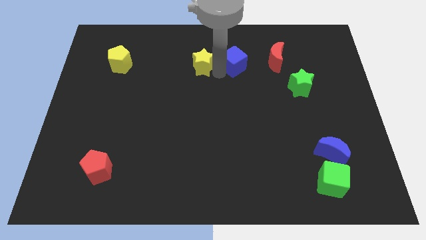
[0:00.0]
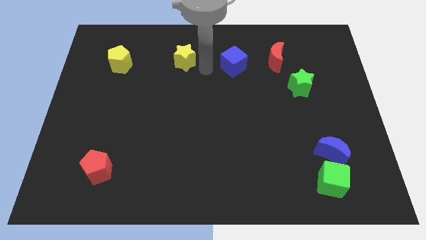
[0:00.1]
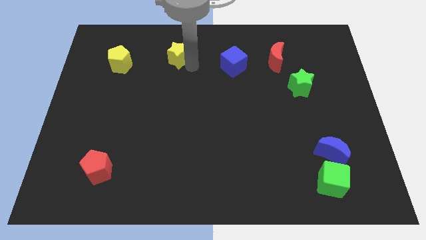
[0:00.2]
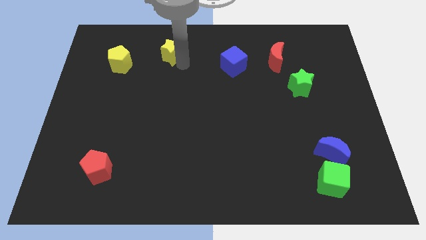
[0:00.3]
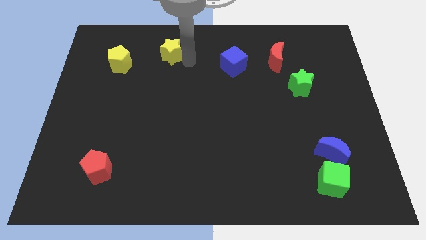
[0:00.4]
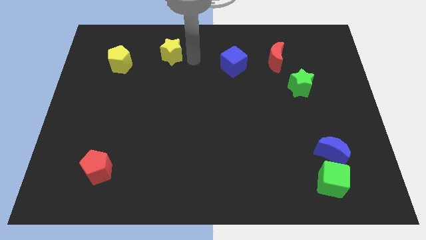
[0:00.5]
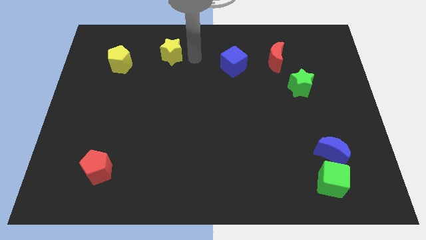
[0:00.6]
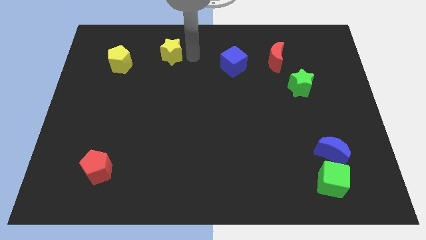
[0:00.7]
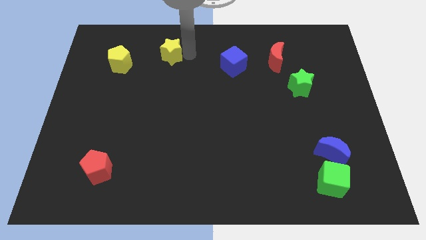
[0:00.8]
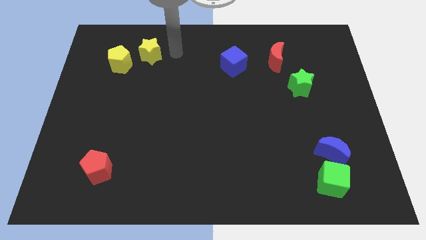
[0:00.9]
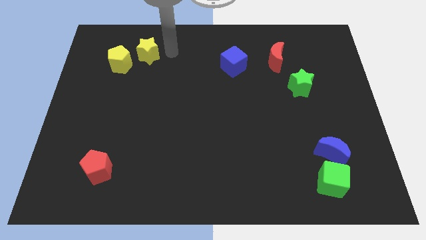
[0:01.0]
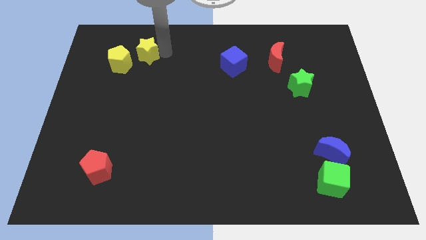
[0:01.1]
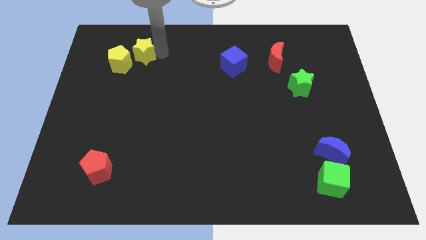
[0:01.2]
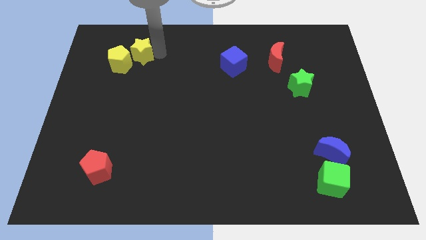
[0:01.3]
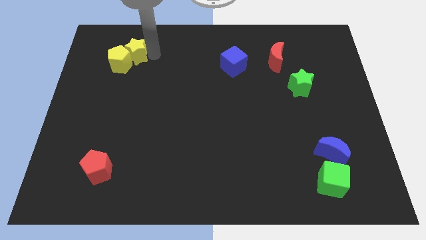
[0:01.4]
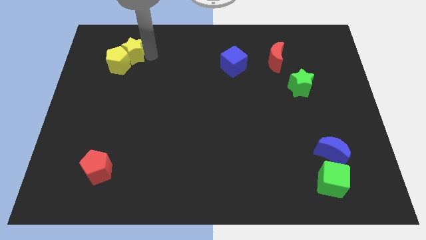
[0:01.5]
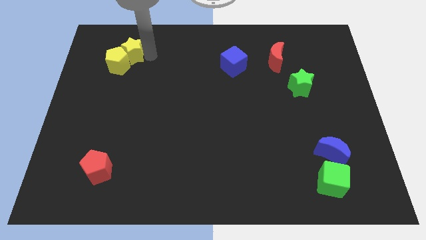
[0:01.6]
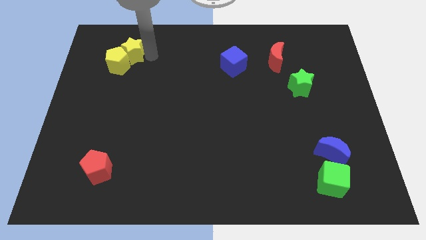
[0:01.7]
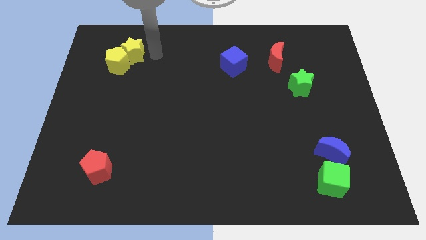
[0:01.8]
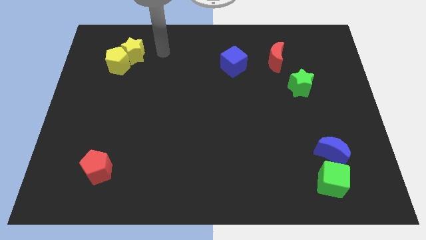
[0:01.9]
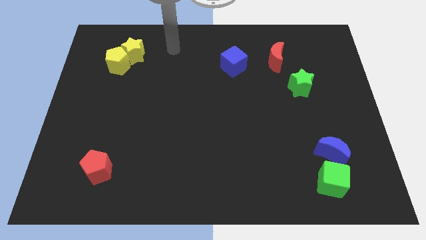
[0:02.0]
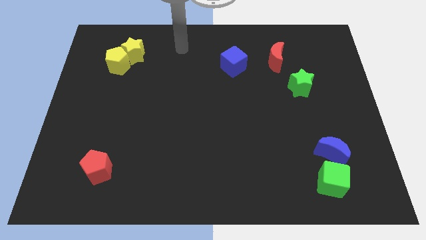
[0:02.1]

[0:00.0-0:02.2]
place the yellow star towards the yellow pentagon

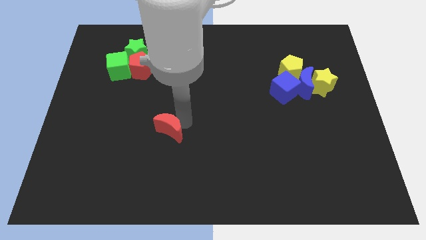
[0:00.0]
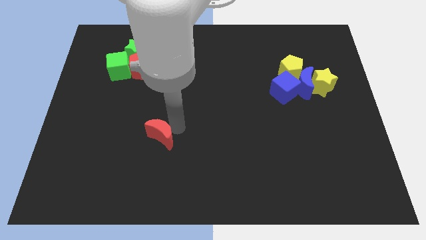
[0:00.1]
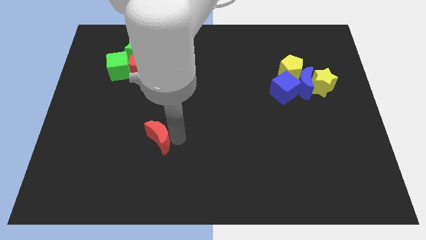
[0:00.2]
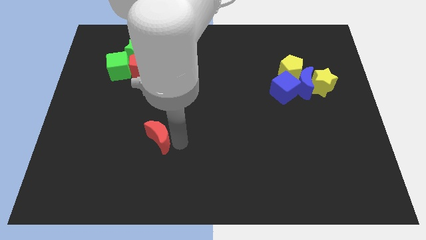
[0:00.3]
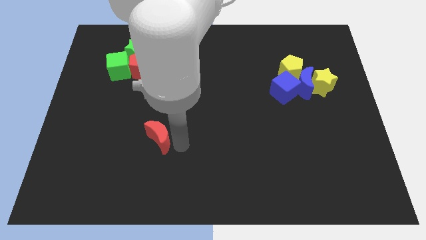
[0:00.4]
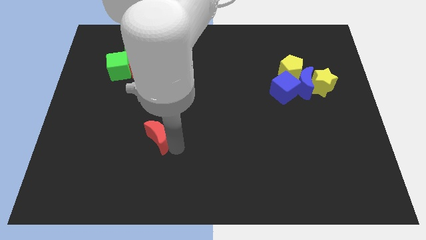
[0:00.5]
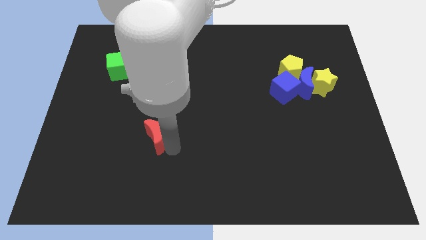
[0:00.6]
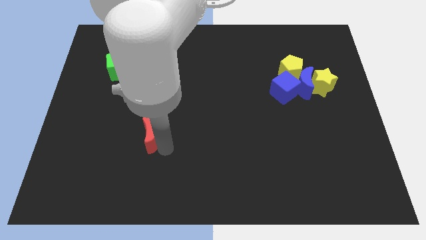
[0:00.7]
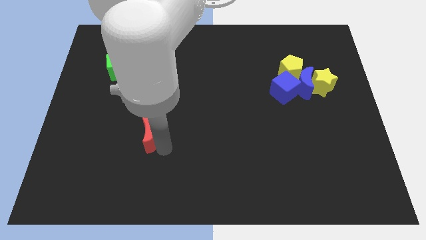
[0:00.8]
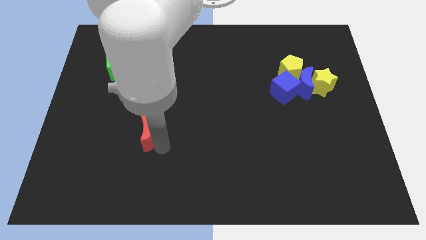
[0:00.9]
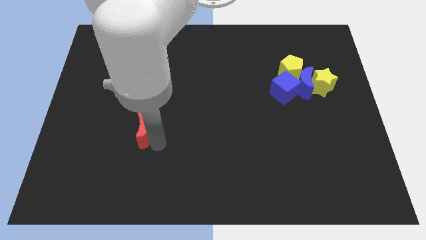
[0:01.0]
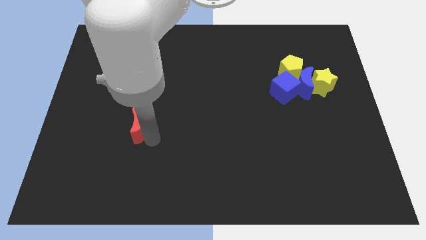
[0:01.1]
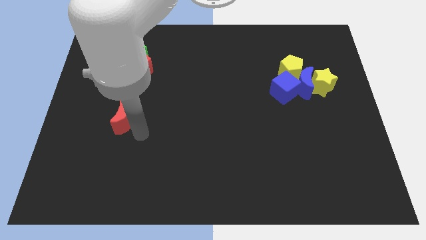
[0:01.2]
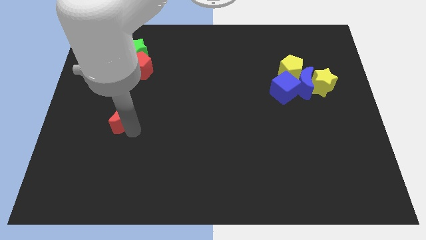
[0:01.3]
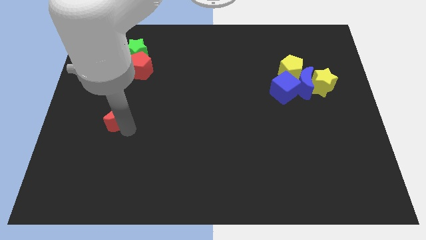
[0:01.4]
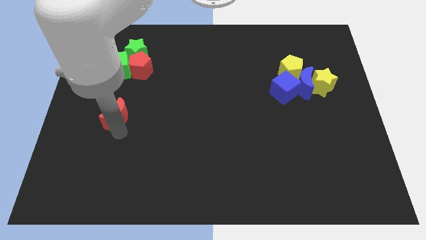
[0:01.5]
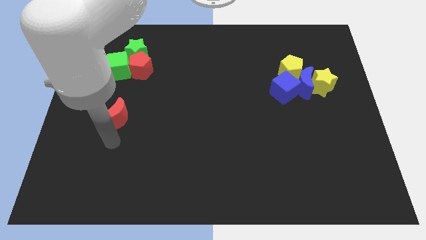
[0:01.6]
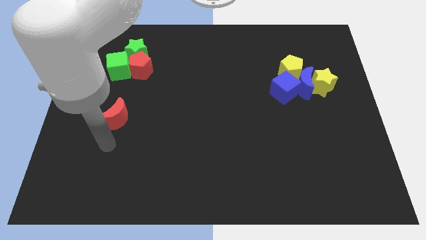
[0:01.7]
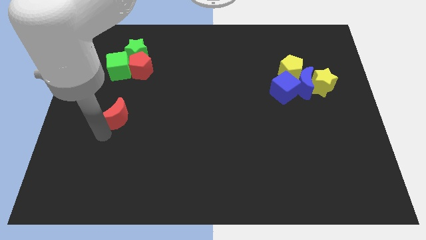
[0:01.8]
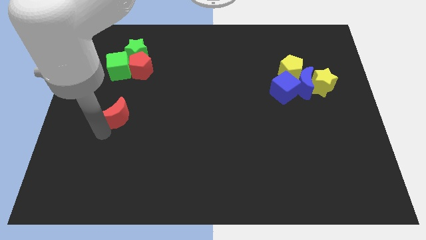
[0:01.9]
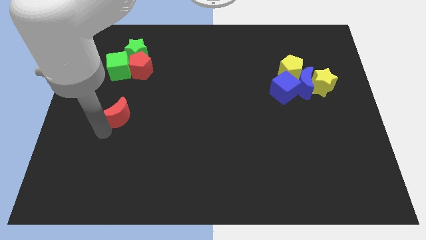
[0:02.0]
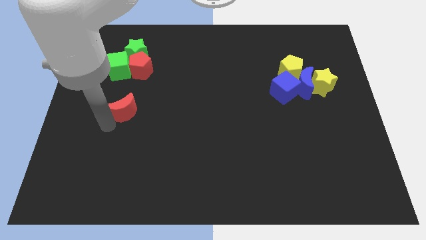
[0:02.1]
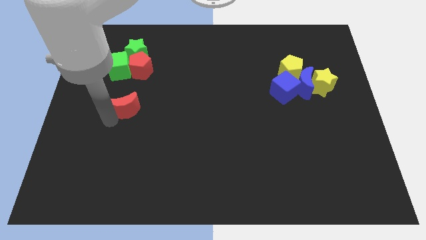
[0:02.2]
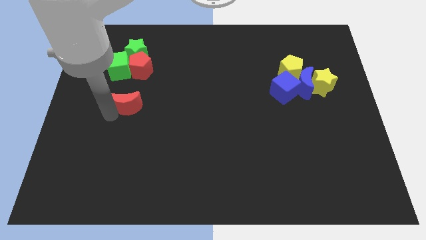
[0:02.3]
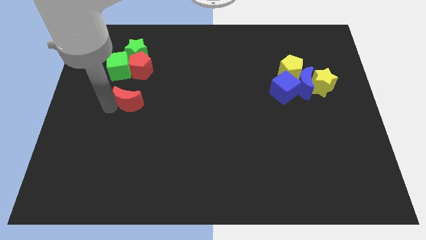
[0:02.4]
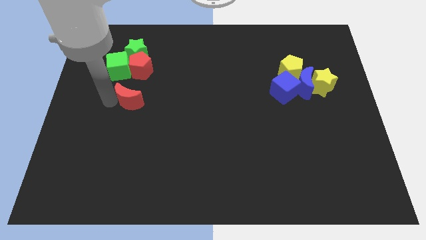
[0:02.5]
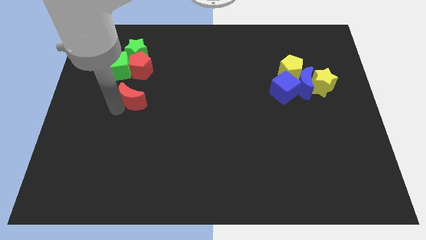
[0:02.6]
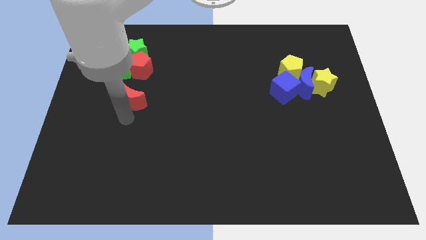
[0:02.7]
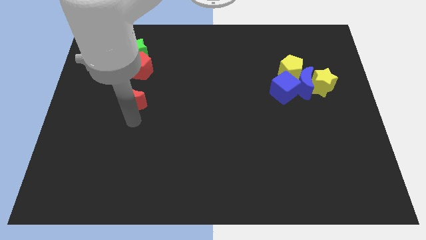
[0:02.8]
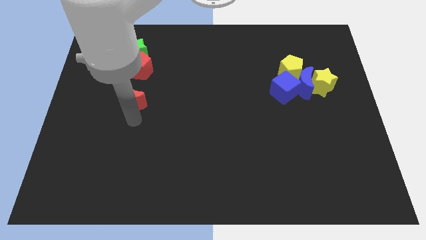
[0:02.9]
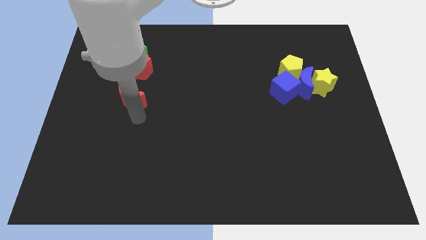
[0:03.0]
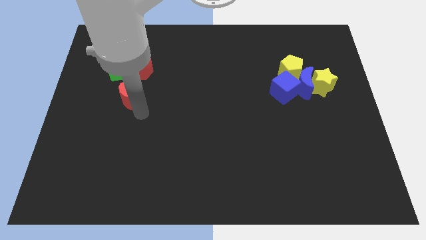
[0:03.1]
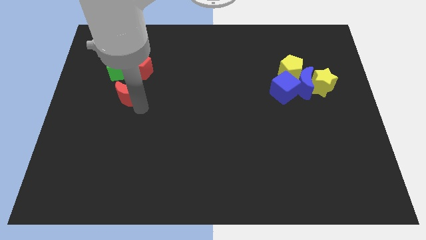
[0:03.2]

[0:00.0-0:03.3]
move the red crescent into the red pentagon

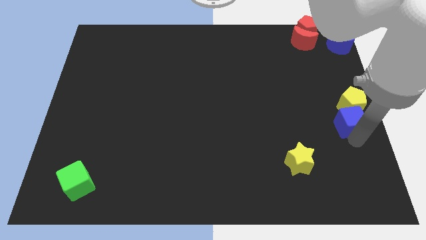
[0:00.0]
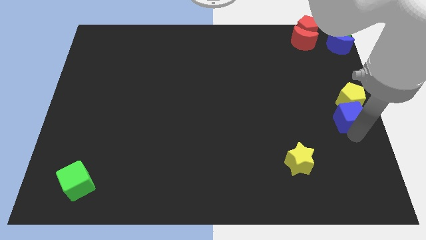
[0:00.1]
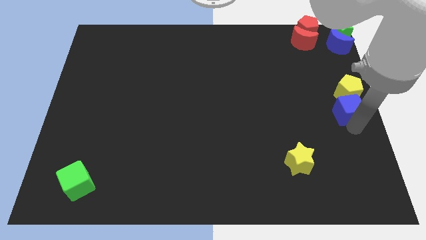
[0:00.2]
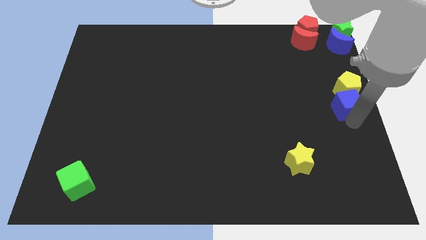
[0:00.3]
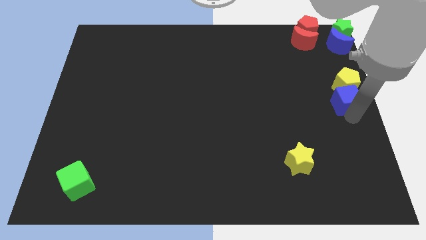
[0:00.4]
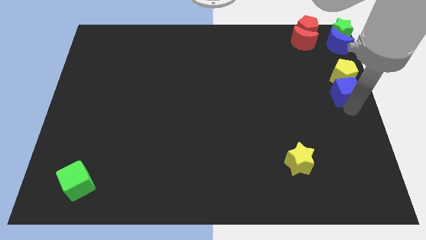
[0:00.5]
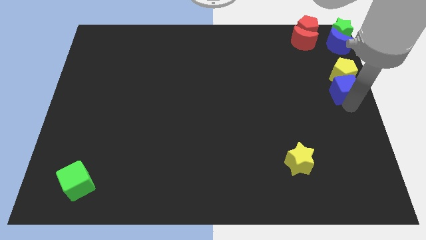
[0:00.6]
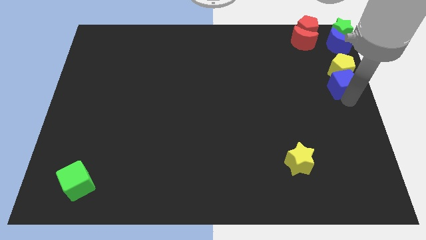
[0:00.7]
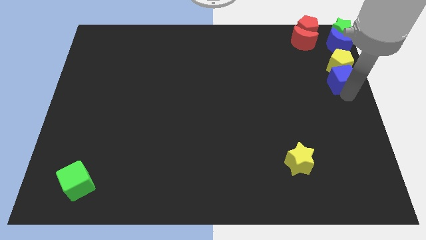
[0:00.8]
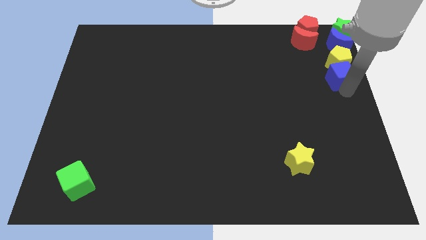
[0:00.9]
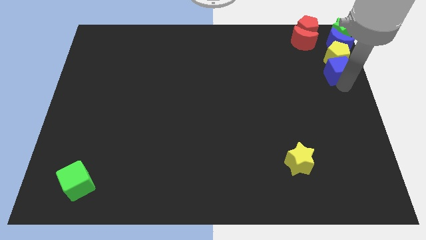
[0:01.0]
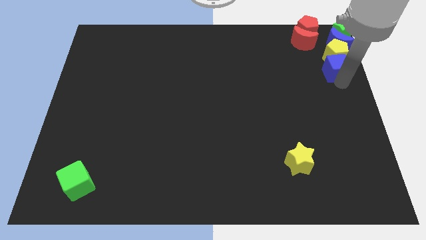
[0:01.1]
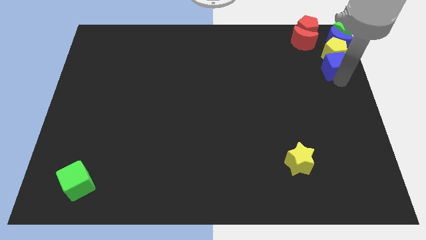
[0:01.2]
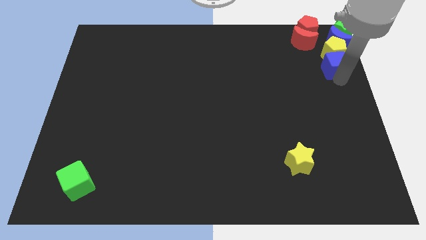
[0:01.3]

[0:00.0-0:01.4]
move the yellow pentagon and blue cube to the top right corner

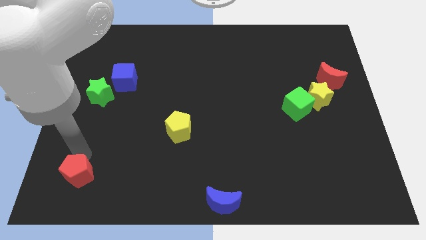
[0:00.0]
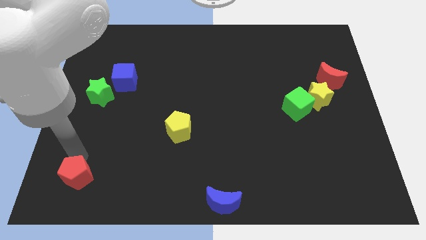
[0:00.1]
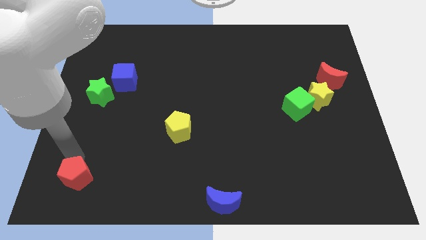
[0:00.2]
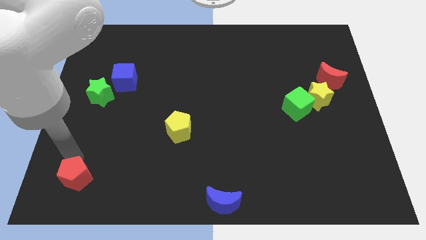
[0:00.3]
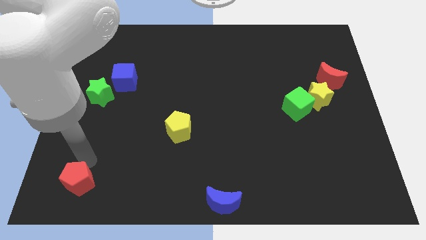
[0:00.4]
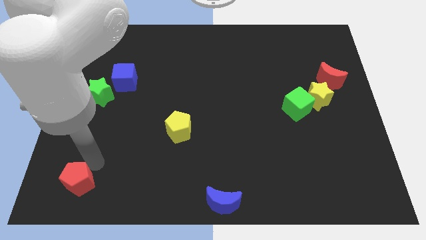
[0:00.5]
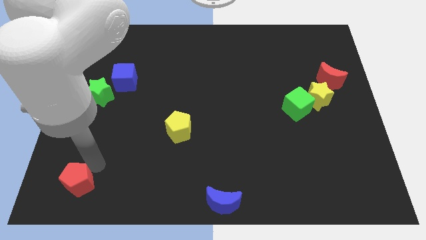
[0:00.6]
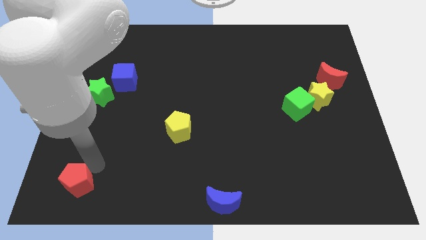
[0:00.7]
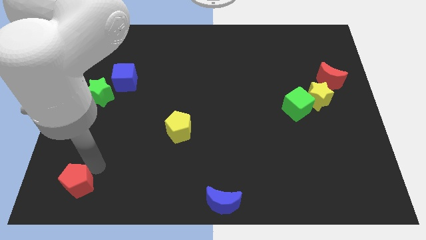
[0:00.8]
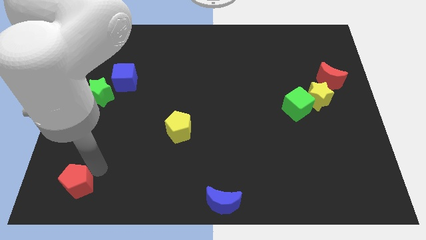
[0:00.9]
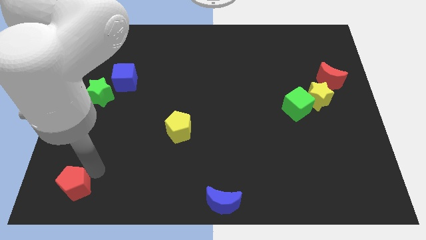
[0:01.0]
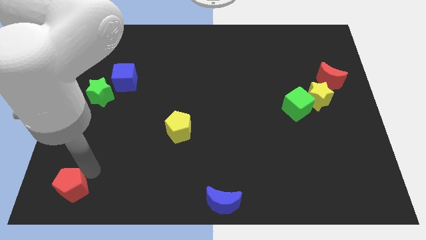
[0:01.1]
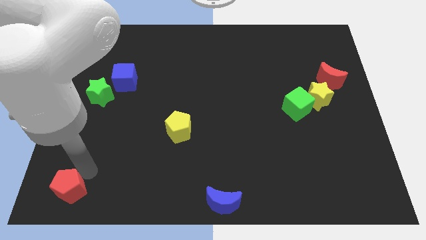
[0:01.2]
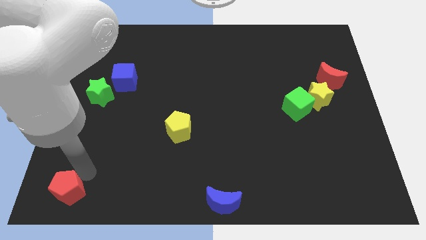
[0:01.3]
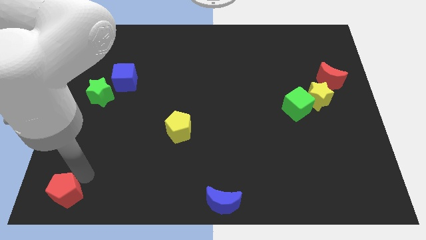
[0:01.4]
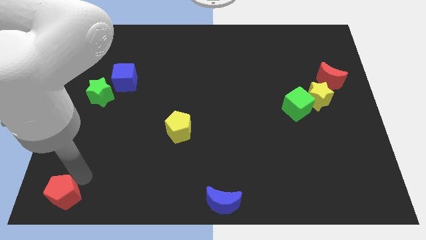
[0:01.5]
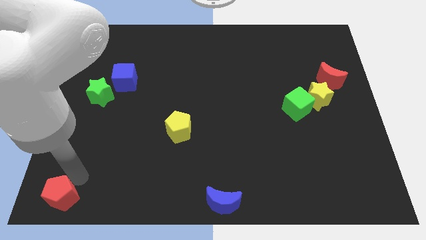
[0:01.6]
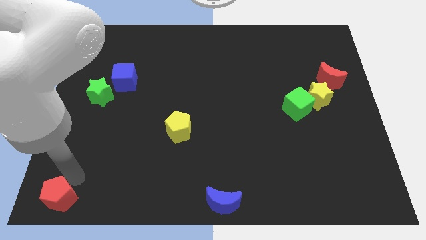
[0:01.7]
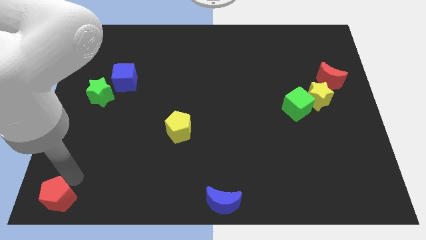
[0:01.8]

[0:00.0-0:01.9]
move the red pentagon to the bottom left of the board

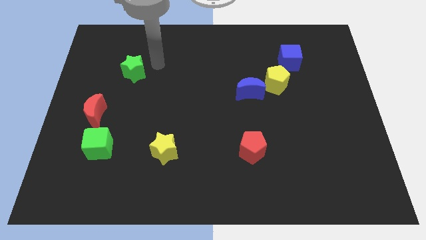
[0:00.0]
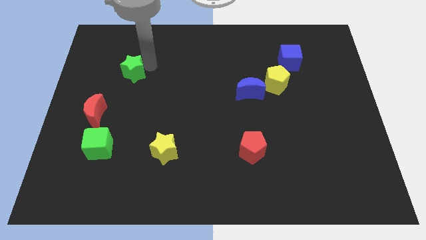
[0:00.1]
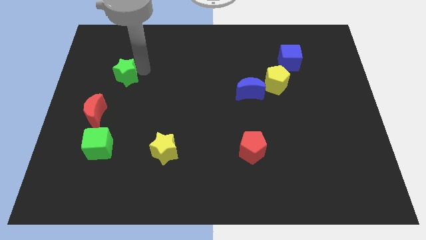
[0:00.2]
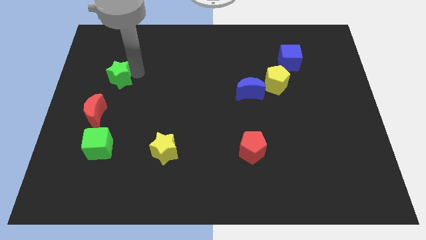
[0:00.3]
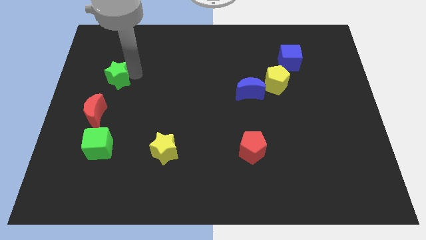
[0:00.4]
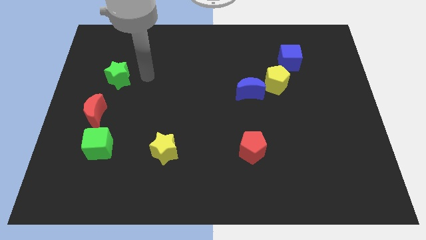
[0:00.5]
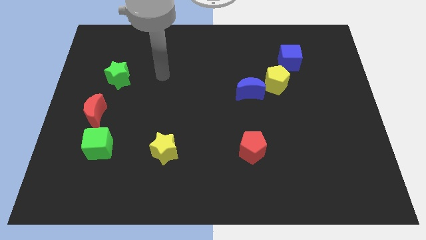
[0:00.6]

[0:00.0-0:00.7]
push the green star to the parallel top of the red crescent
